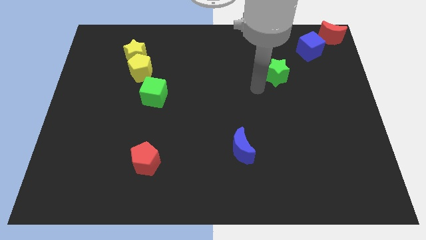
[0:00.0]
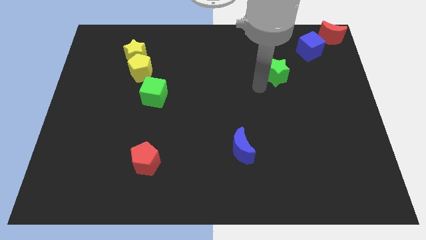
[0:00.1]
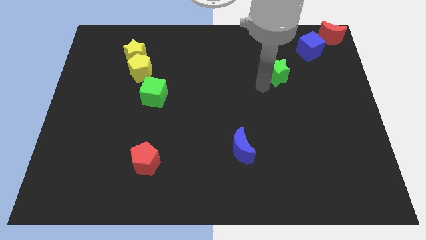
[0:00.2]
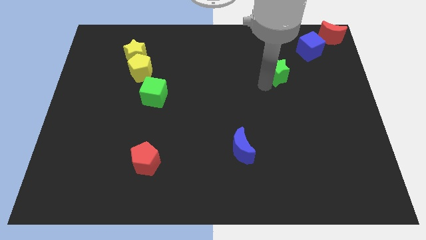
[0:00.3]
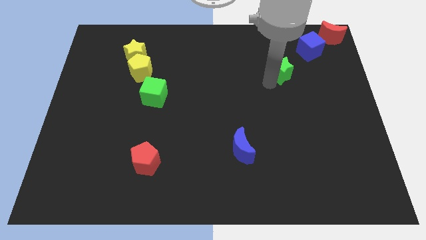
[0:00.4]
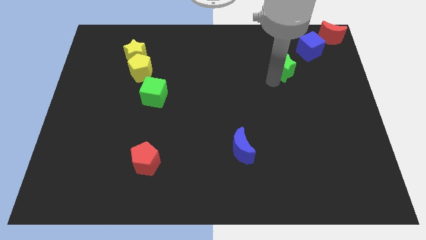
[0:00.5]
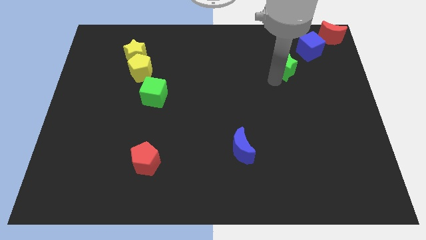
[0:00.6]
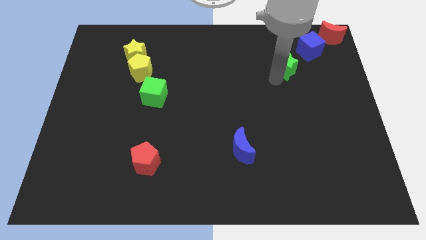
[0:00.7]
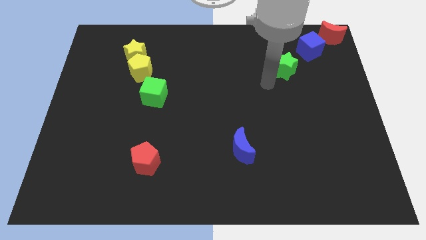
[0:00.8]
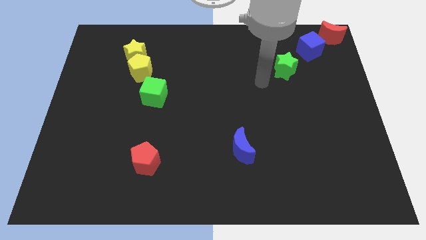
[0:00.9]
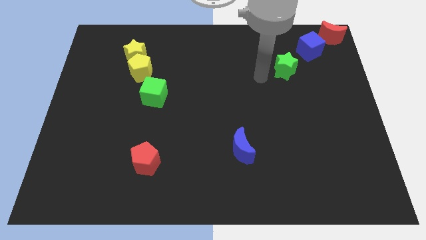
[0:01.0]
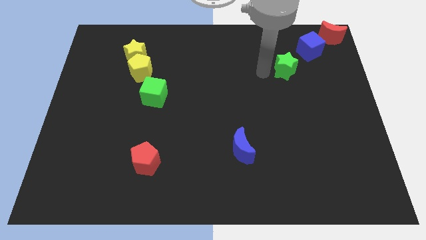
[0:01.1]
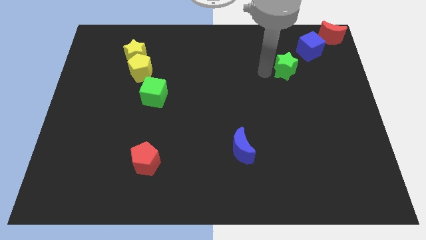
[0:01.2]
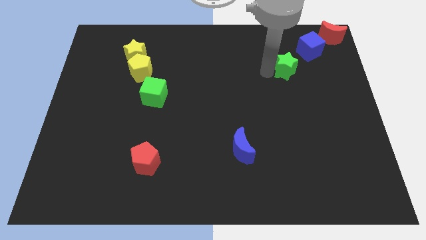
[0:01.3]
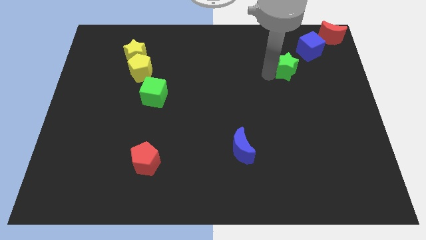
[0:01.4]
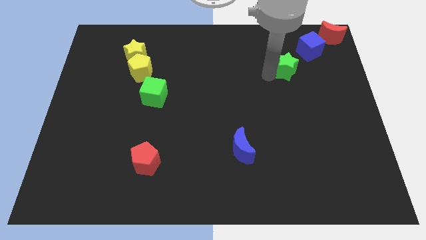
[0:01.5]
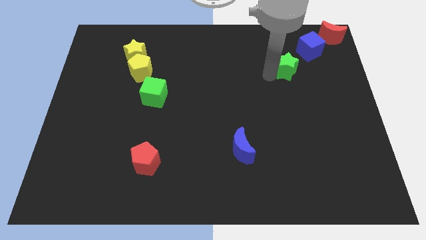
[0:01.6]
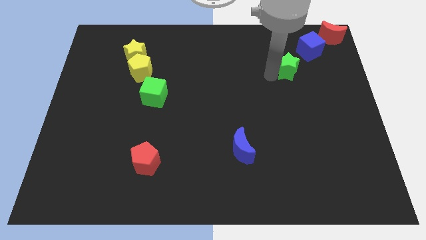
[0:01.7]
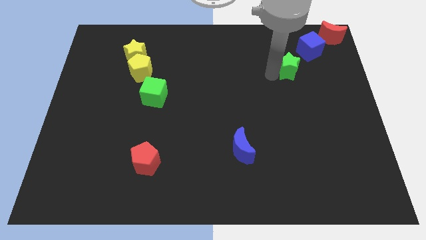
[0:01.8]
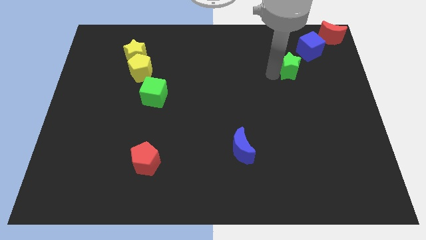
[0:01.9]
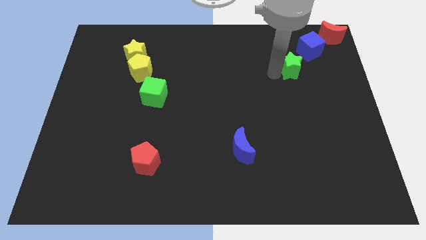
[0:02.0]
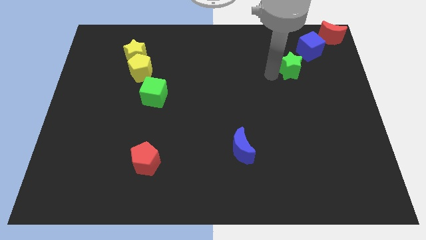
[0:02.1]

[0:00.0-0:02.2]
push the green star towards the bottom of the blue cube vertically

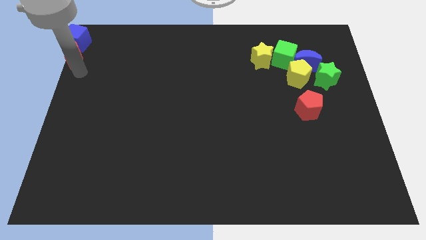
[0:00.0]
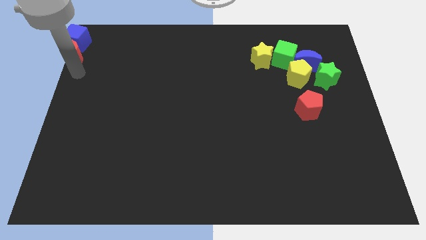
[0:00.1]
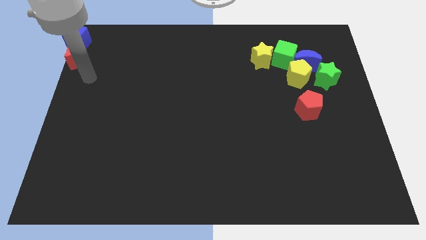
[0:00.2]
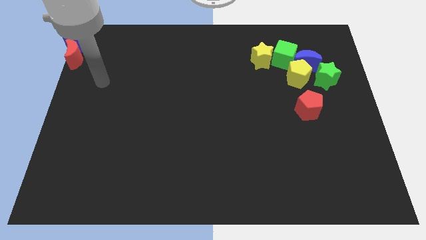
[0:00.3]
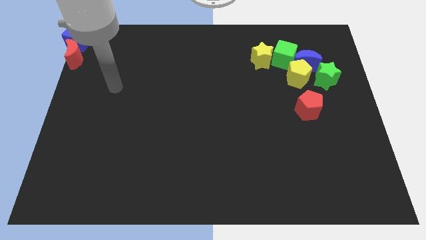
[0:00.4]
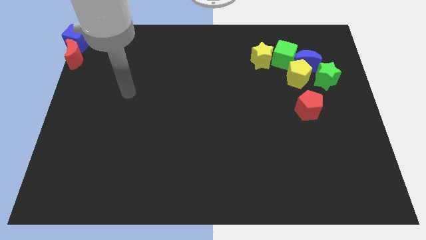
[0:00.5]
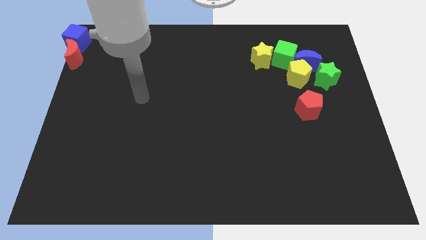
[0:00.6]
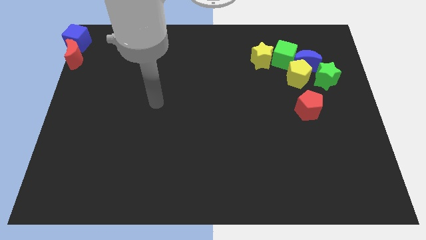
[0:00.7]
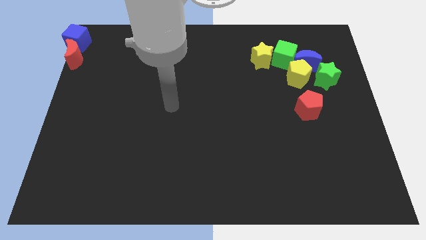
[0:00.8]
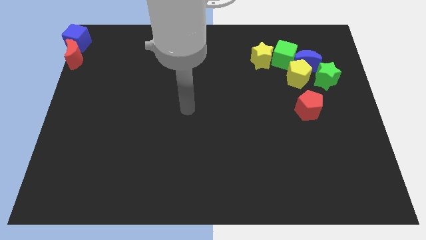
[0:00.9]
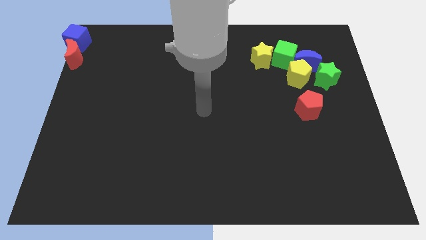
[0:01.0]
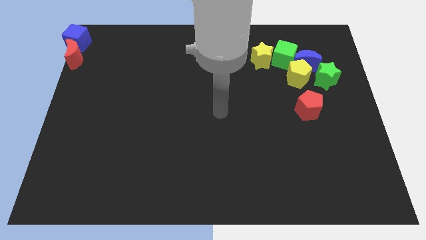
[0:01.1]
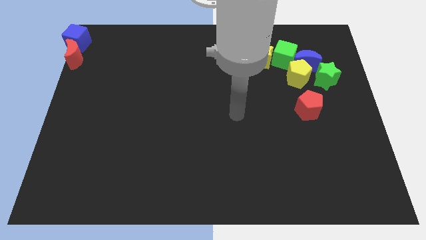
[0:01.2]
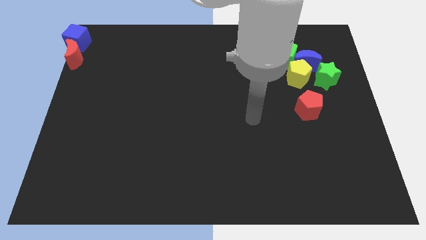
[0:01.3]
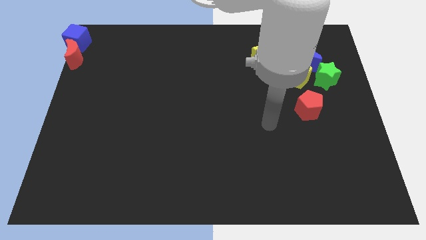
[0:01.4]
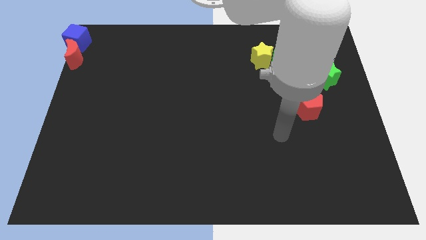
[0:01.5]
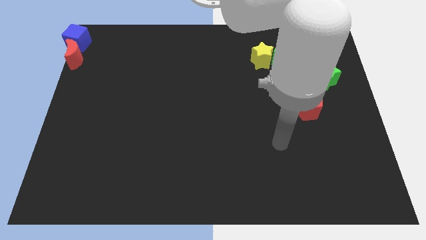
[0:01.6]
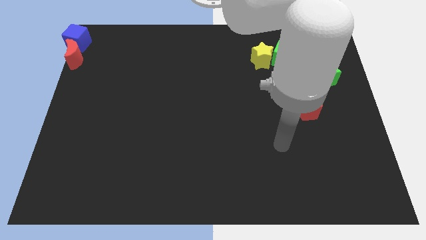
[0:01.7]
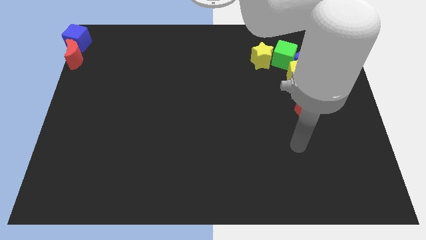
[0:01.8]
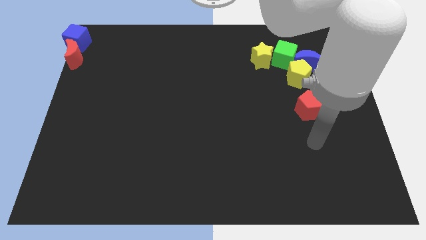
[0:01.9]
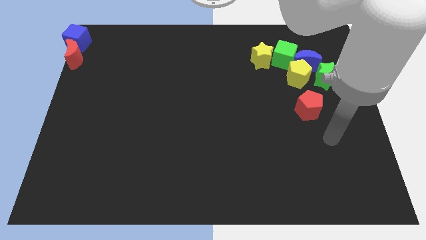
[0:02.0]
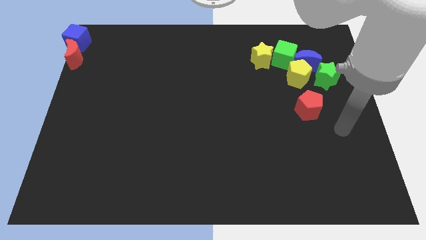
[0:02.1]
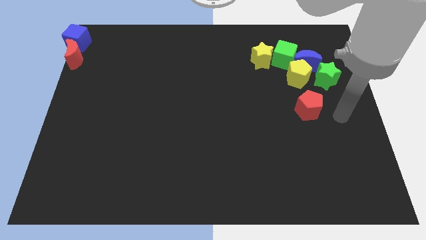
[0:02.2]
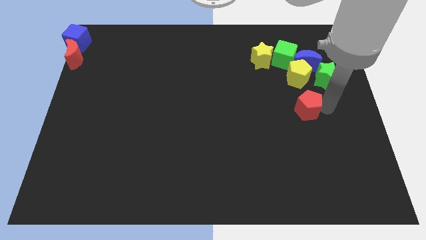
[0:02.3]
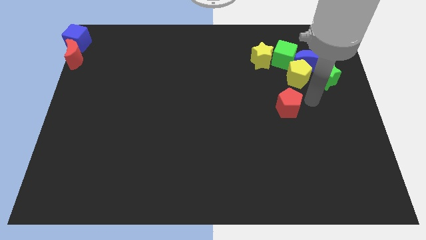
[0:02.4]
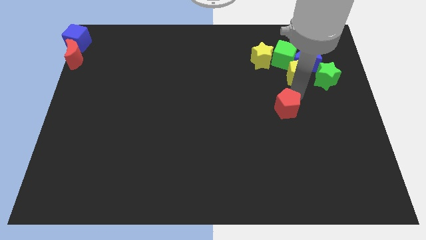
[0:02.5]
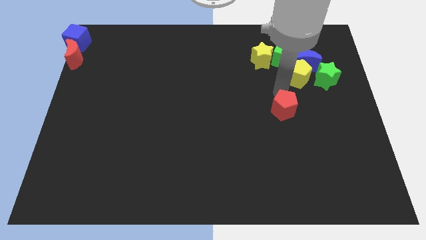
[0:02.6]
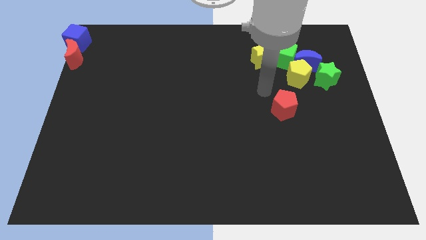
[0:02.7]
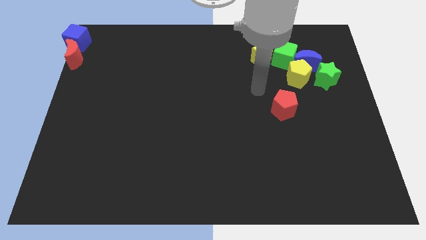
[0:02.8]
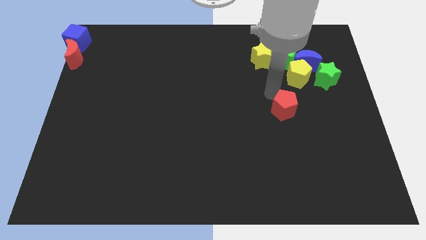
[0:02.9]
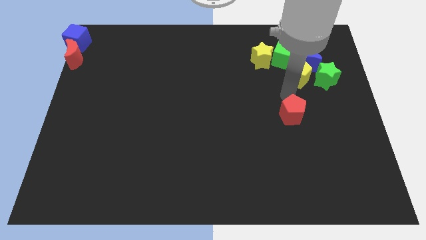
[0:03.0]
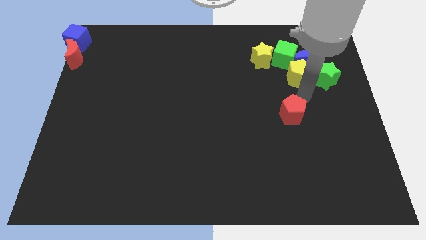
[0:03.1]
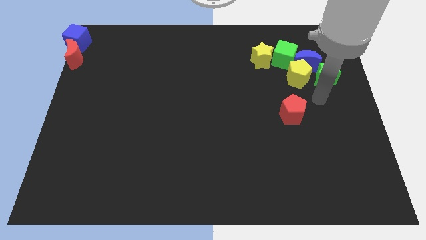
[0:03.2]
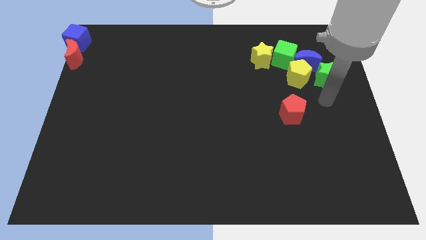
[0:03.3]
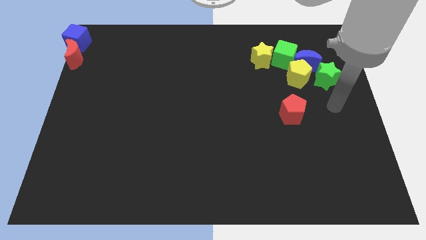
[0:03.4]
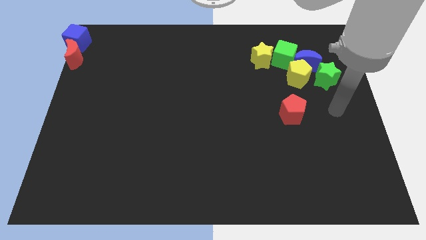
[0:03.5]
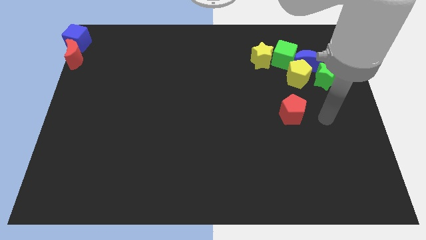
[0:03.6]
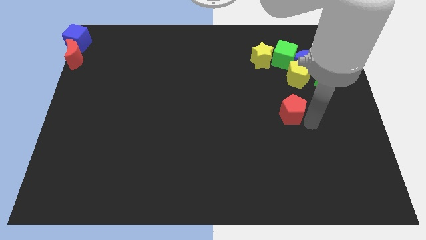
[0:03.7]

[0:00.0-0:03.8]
move your arm to the right side of the red pentagon

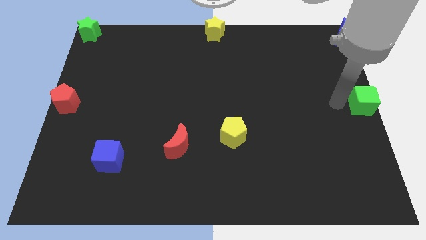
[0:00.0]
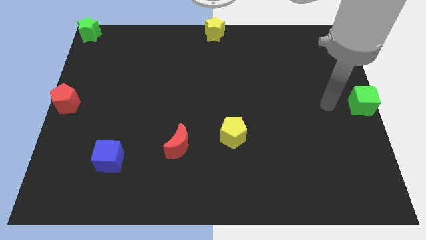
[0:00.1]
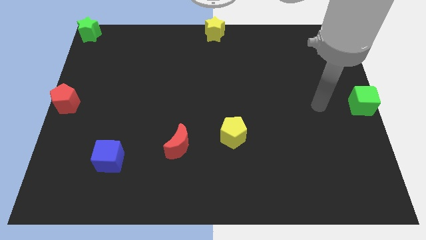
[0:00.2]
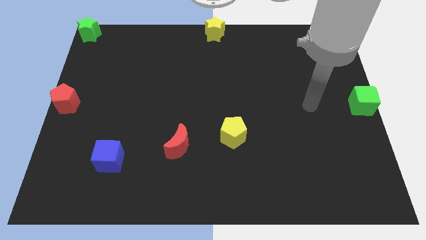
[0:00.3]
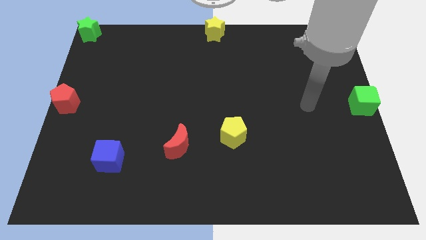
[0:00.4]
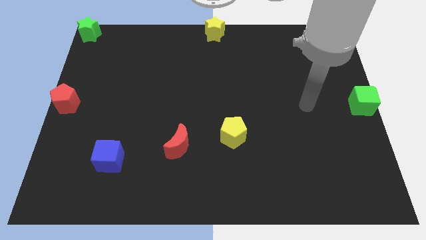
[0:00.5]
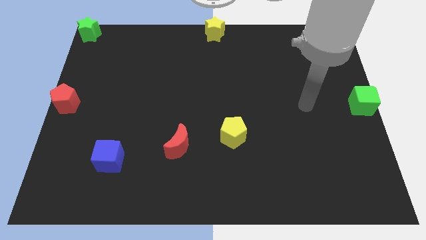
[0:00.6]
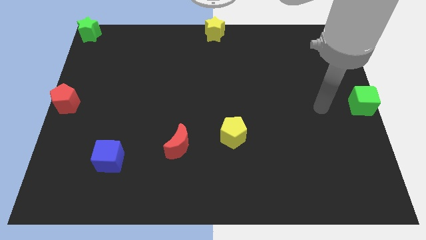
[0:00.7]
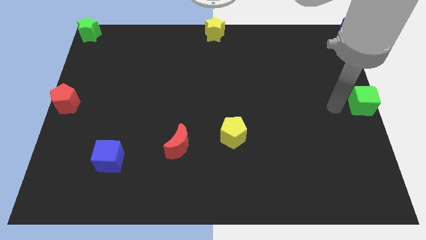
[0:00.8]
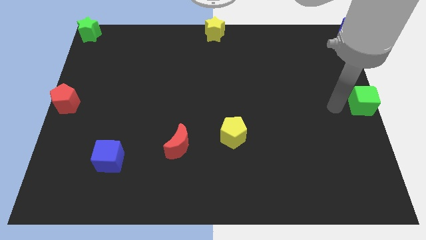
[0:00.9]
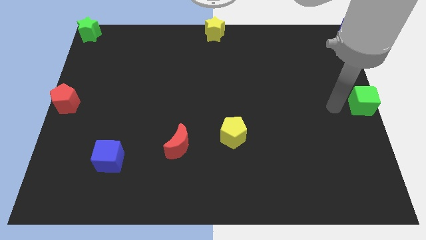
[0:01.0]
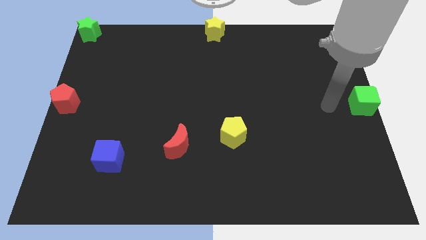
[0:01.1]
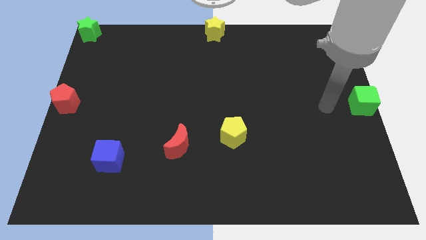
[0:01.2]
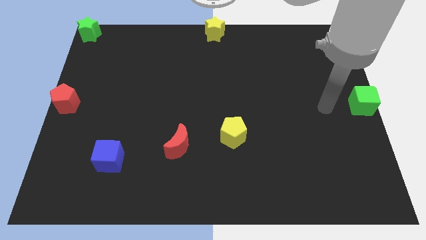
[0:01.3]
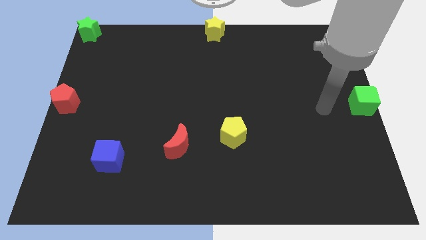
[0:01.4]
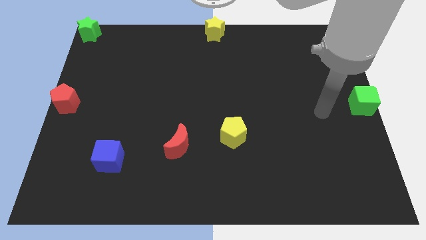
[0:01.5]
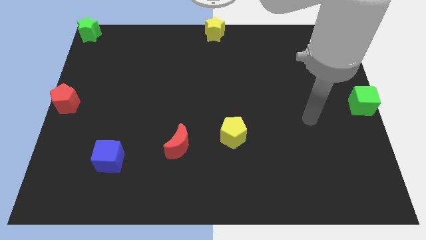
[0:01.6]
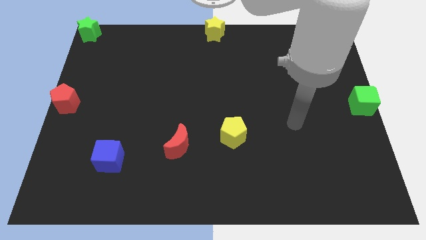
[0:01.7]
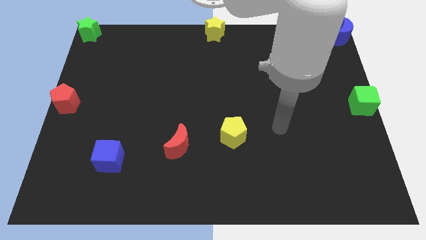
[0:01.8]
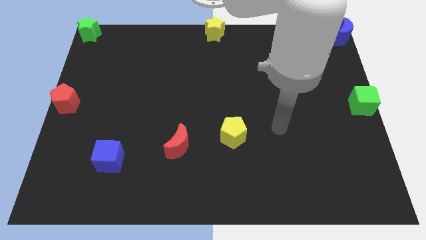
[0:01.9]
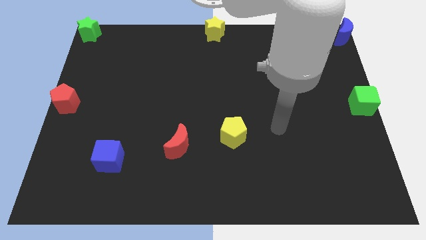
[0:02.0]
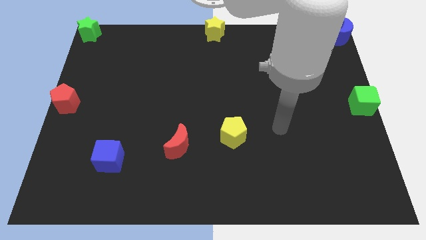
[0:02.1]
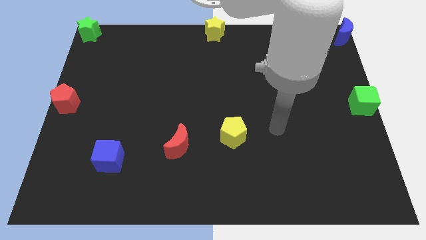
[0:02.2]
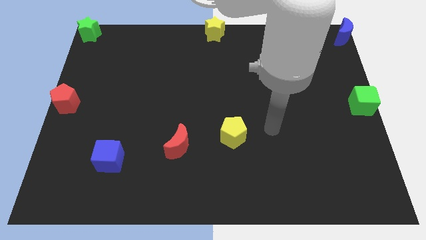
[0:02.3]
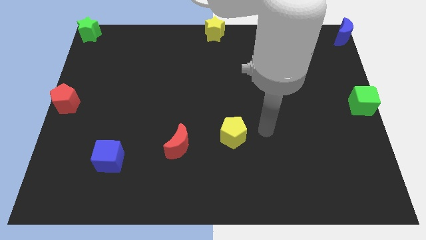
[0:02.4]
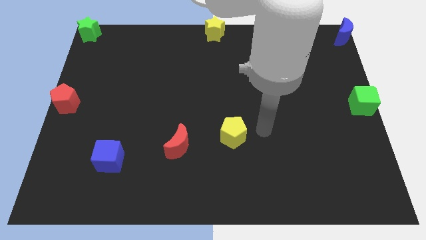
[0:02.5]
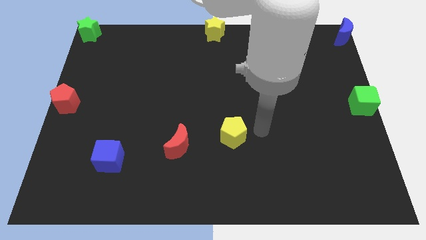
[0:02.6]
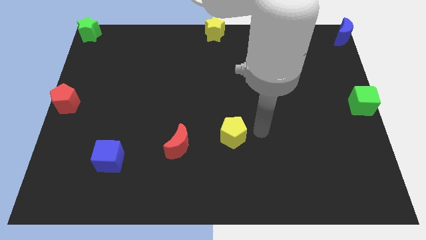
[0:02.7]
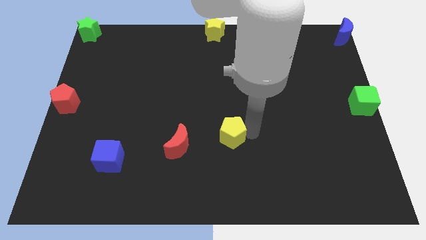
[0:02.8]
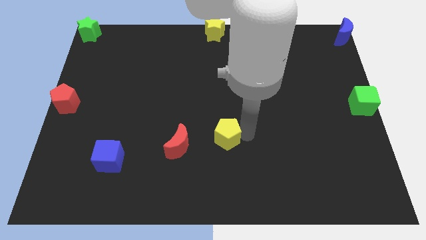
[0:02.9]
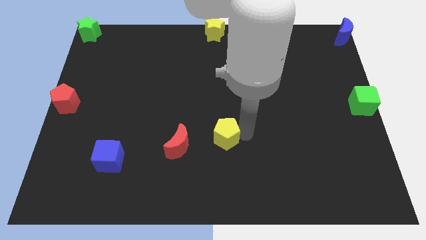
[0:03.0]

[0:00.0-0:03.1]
move your arm towards the yellow pentagon
